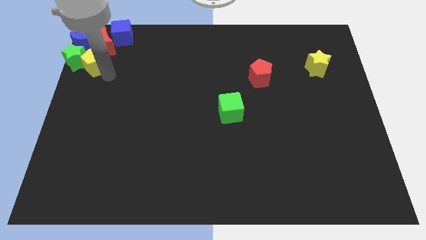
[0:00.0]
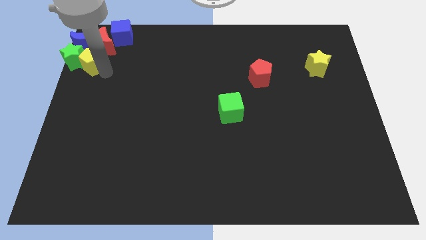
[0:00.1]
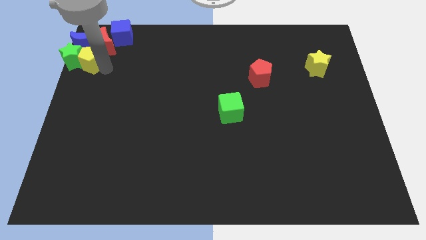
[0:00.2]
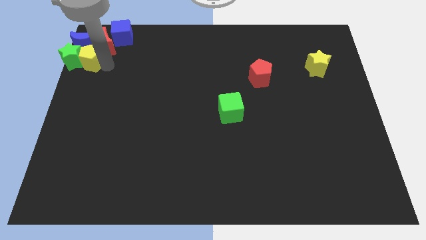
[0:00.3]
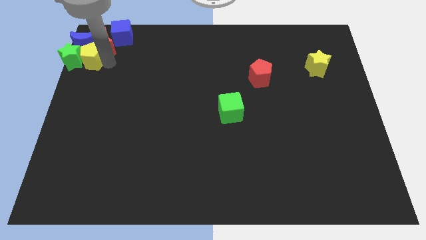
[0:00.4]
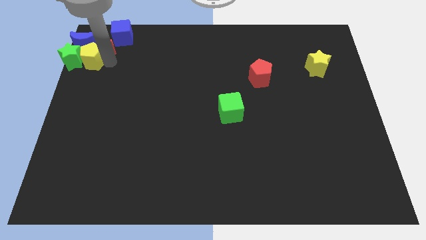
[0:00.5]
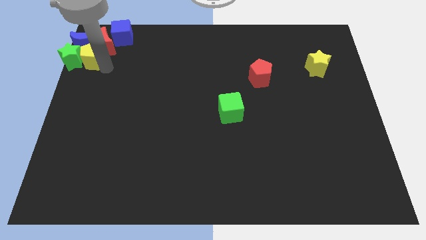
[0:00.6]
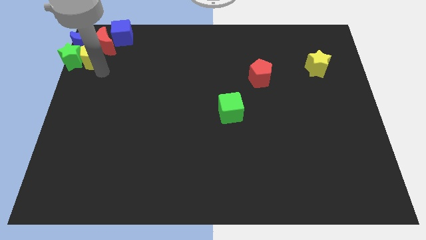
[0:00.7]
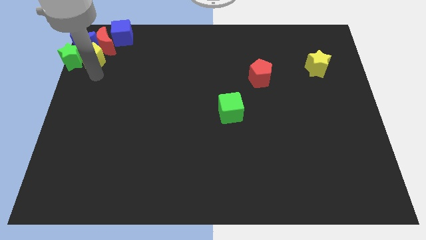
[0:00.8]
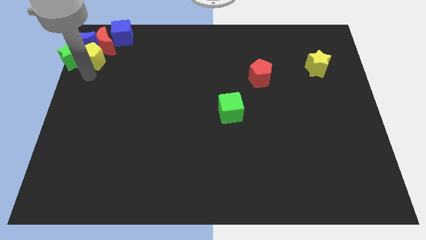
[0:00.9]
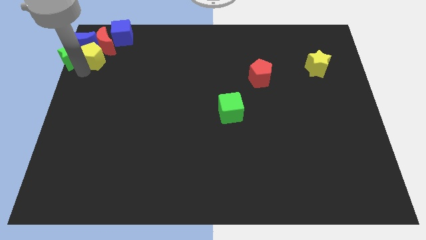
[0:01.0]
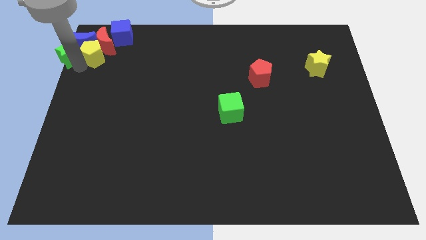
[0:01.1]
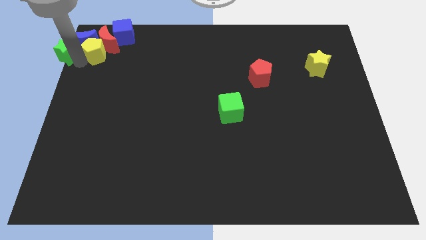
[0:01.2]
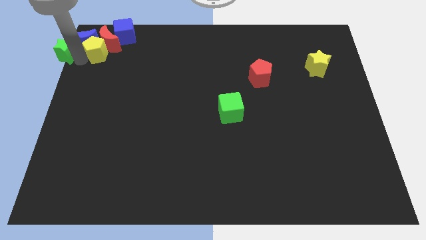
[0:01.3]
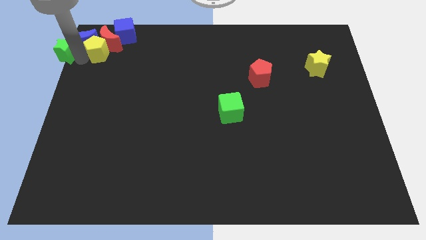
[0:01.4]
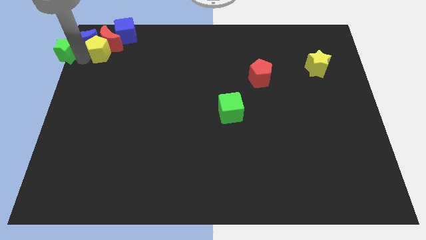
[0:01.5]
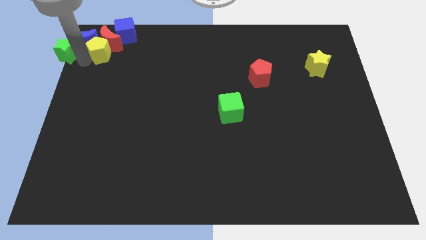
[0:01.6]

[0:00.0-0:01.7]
separate the green star and yellow pentagon

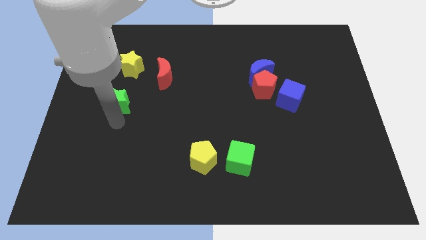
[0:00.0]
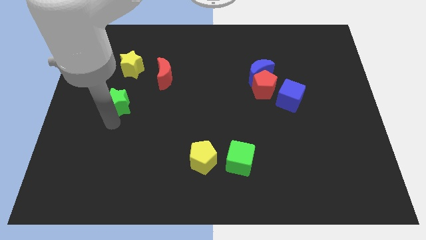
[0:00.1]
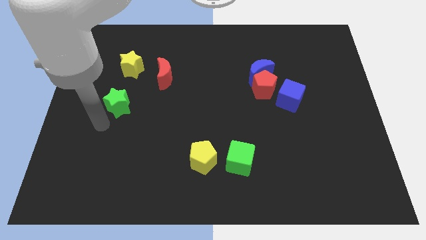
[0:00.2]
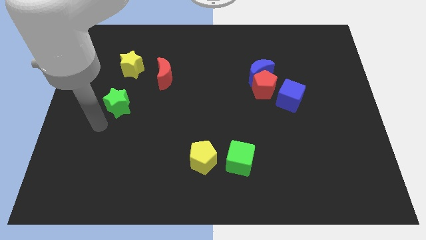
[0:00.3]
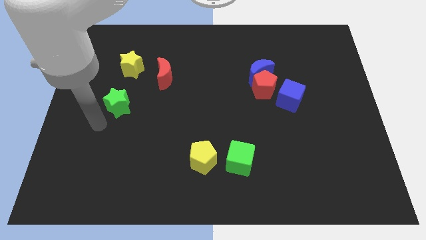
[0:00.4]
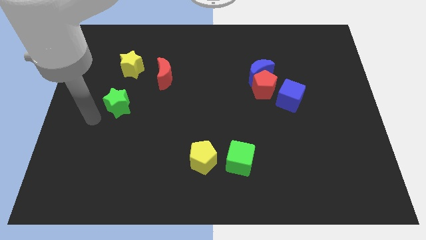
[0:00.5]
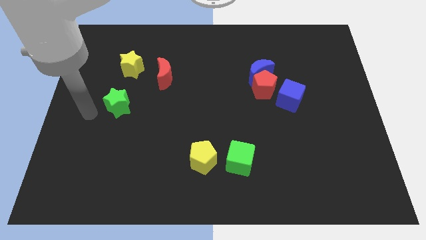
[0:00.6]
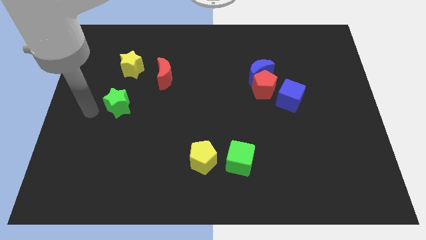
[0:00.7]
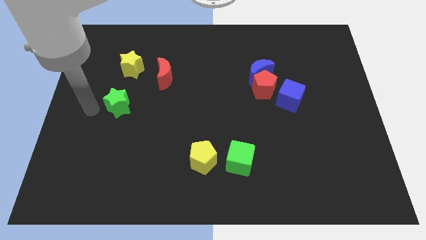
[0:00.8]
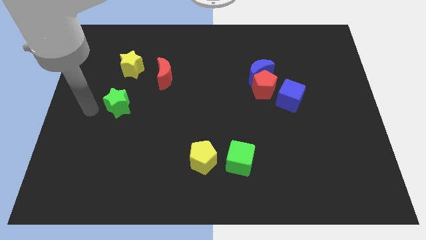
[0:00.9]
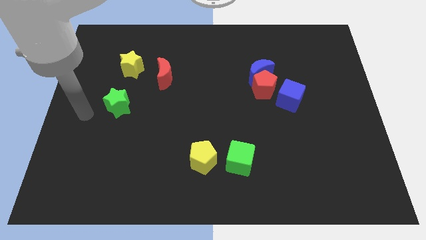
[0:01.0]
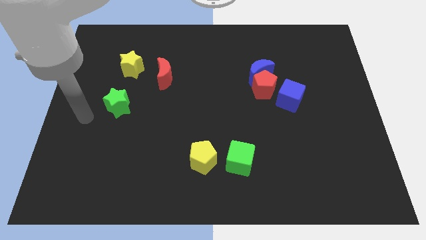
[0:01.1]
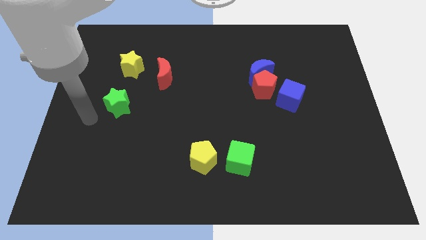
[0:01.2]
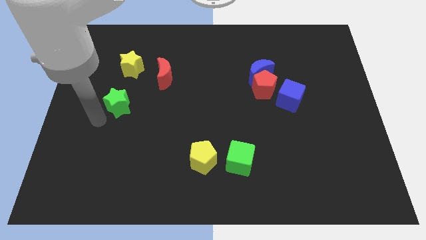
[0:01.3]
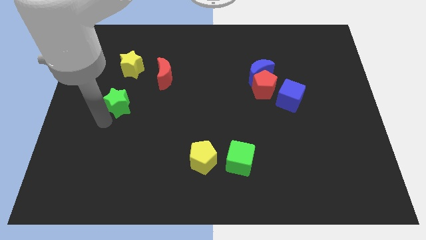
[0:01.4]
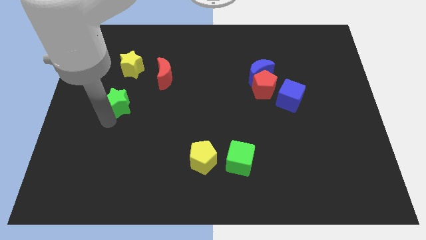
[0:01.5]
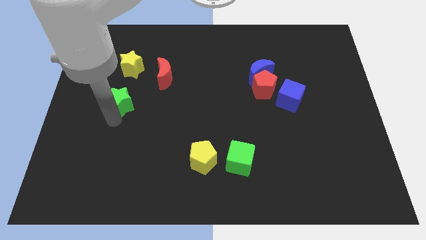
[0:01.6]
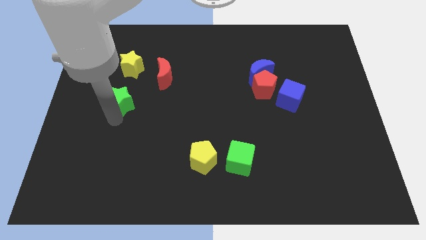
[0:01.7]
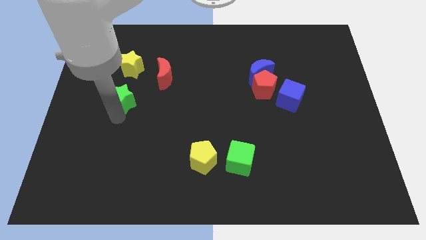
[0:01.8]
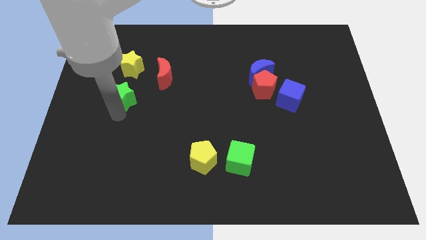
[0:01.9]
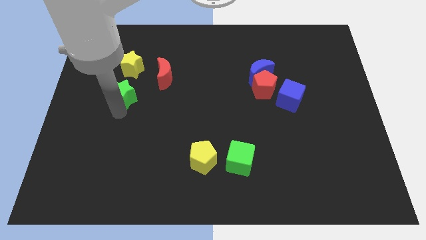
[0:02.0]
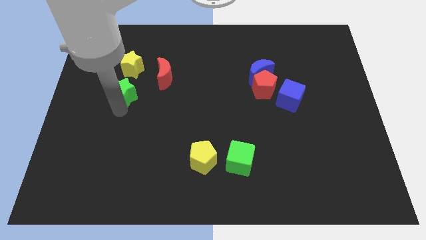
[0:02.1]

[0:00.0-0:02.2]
push the green star below the yellow star

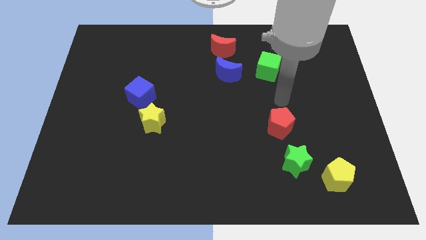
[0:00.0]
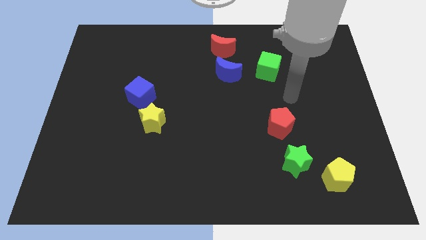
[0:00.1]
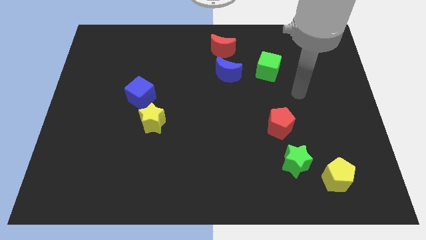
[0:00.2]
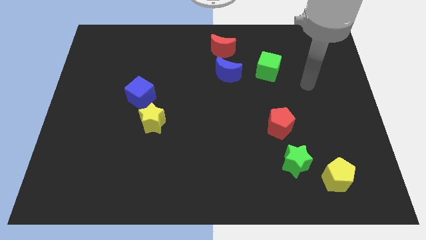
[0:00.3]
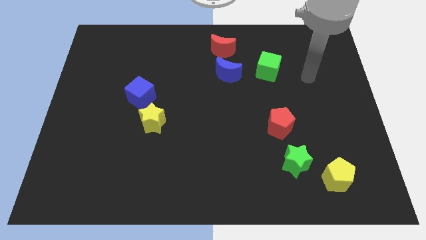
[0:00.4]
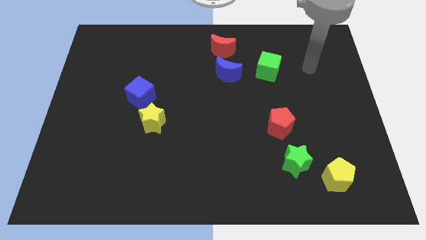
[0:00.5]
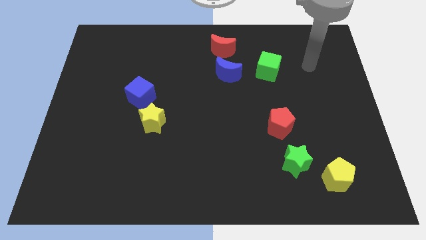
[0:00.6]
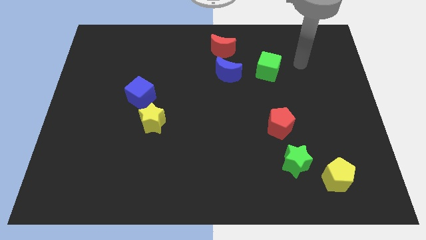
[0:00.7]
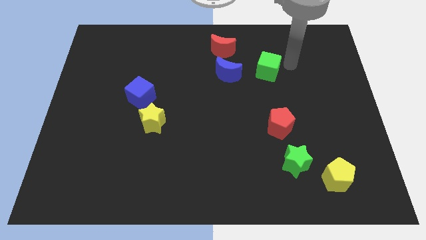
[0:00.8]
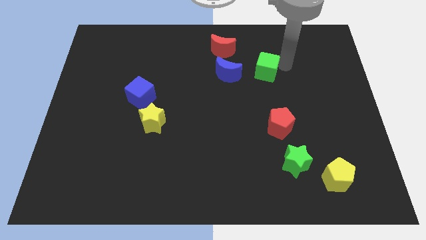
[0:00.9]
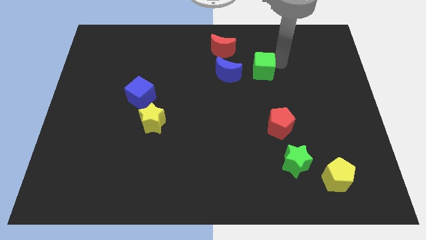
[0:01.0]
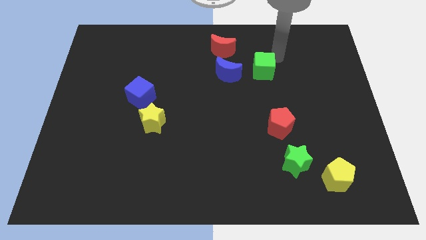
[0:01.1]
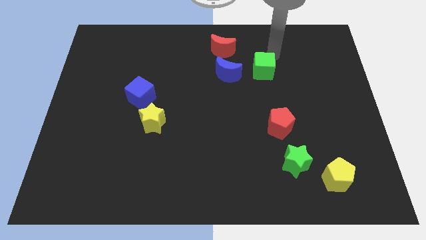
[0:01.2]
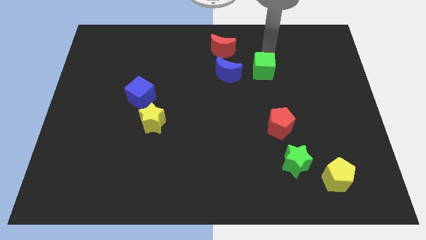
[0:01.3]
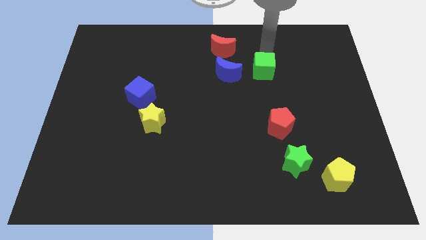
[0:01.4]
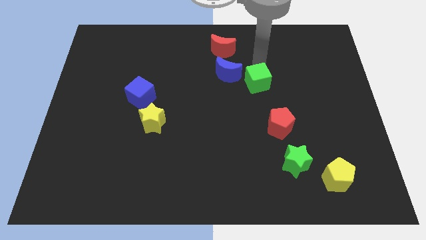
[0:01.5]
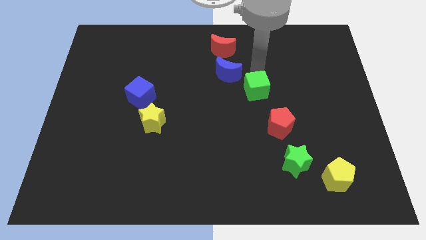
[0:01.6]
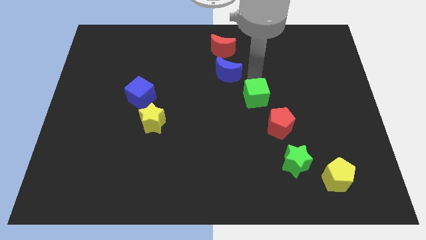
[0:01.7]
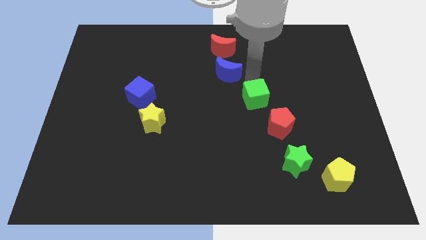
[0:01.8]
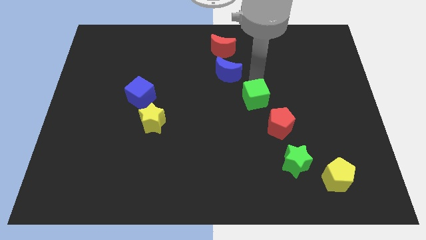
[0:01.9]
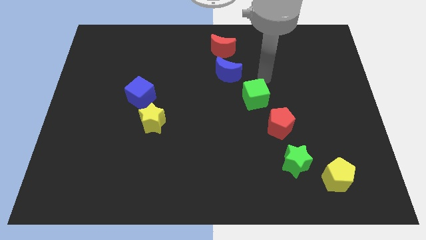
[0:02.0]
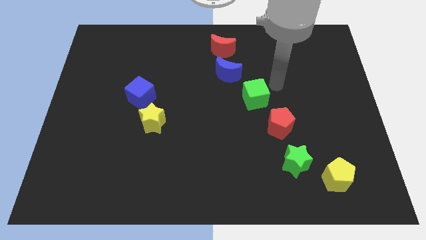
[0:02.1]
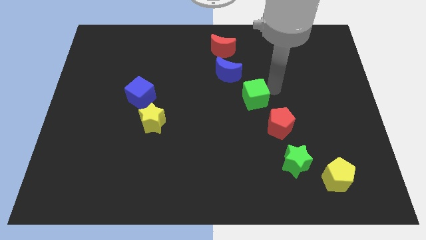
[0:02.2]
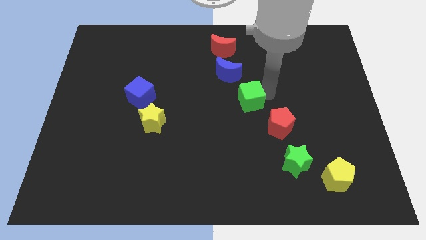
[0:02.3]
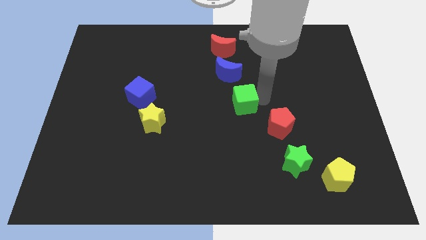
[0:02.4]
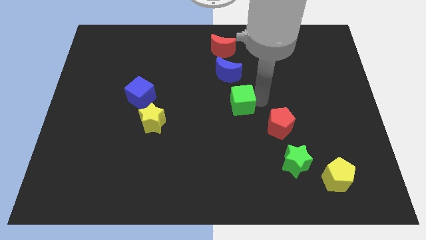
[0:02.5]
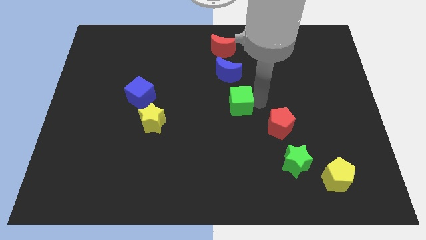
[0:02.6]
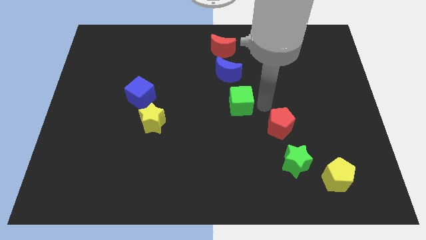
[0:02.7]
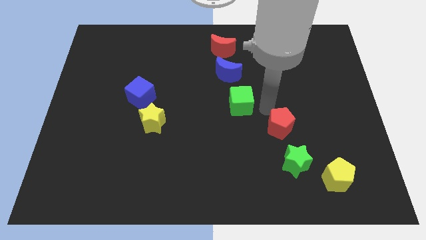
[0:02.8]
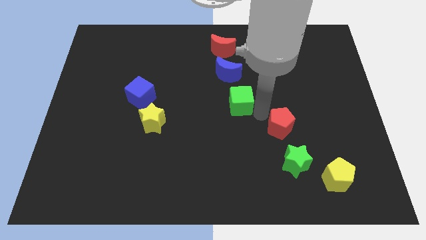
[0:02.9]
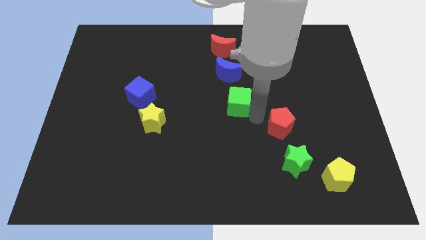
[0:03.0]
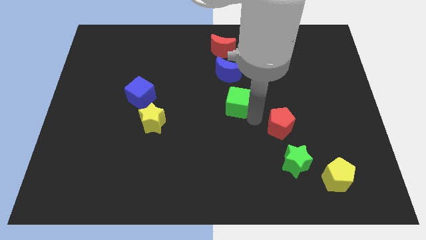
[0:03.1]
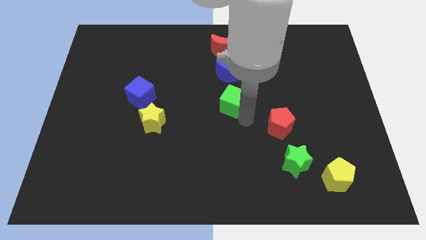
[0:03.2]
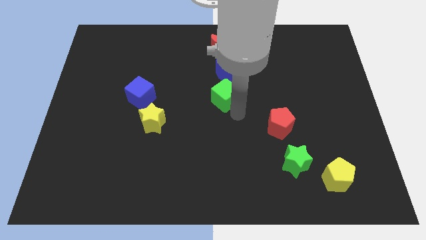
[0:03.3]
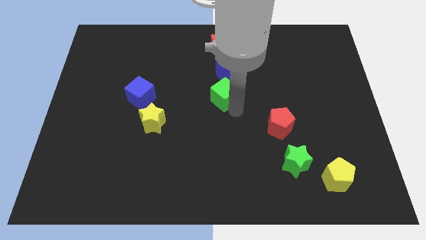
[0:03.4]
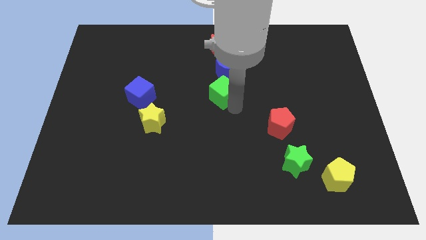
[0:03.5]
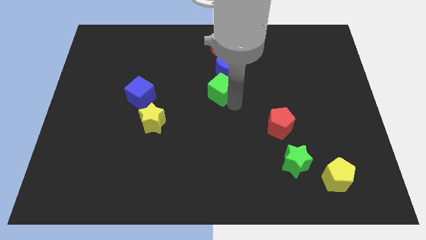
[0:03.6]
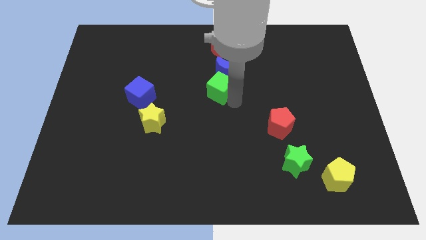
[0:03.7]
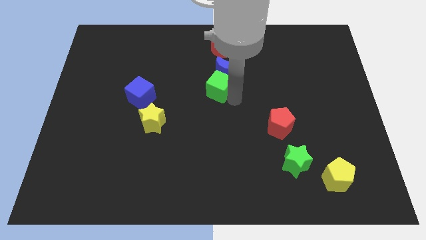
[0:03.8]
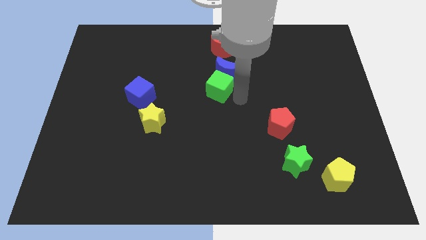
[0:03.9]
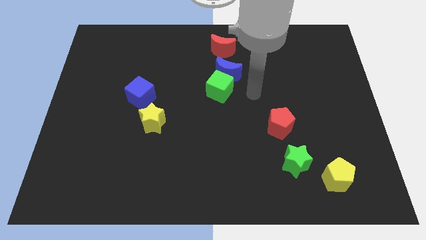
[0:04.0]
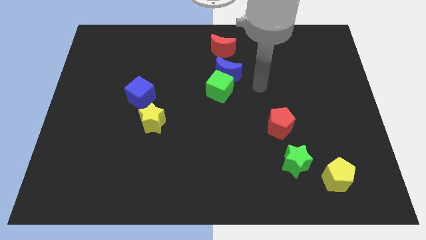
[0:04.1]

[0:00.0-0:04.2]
place the green cube below the blue cube

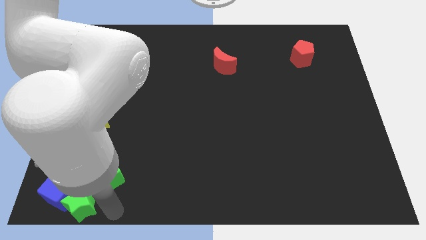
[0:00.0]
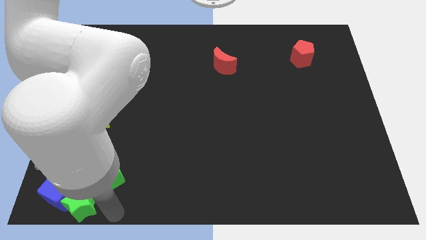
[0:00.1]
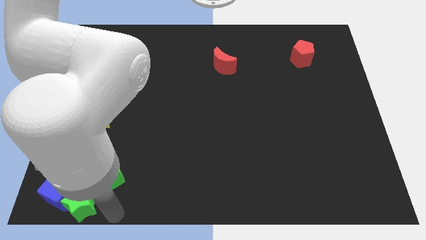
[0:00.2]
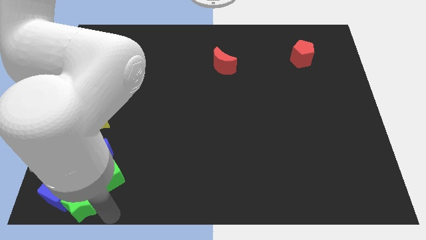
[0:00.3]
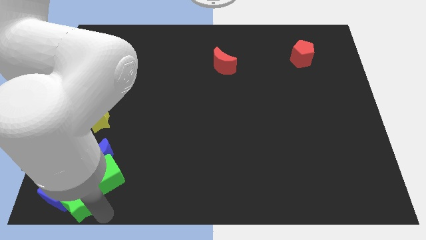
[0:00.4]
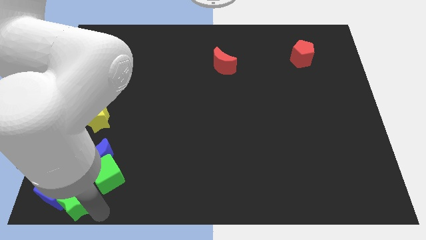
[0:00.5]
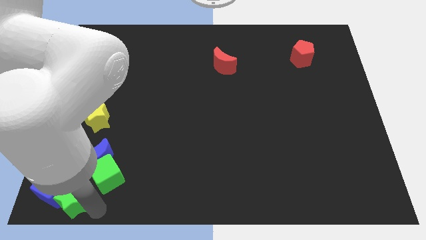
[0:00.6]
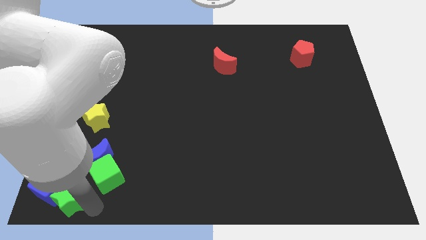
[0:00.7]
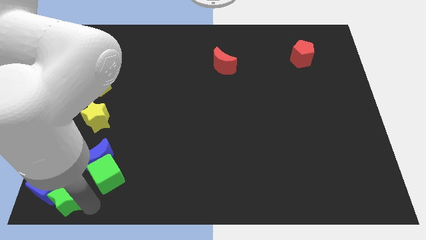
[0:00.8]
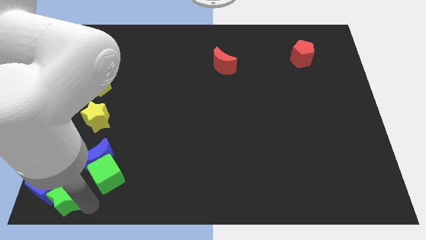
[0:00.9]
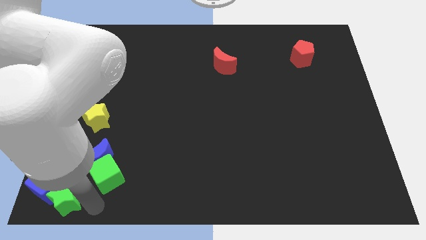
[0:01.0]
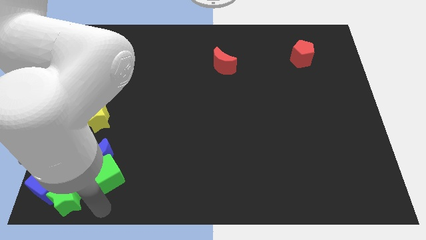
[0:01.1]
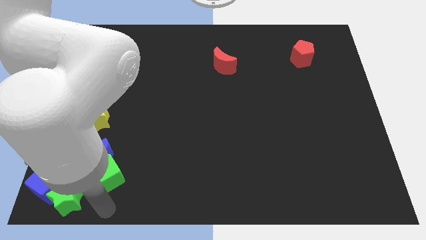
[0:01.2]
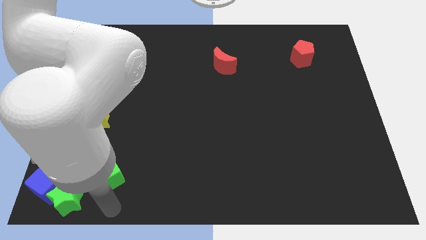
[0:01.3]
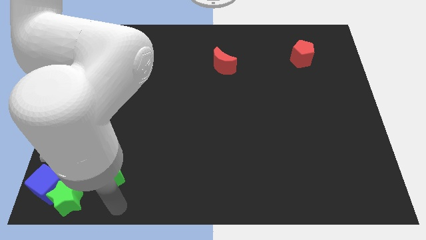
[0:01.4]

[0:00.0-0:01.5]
move green star and blue cube to the bottom left corner of the board
